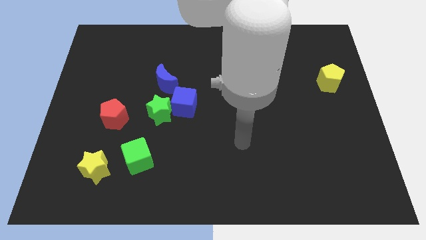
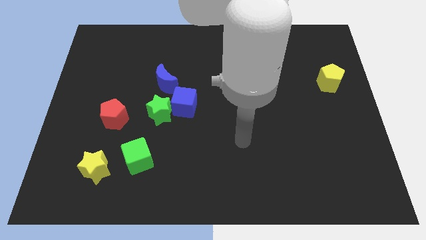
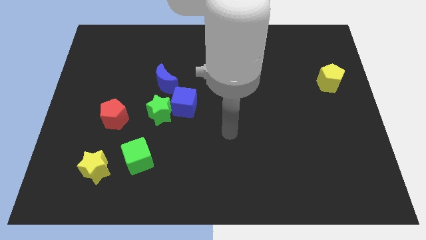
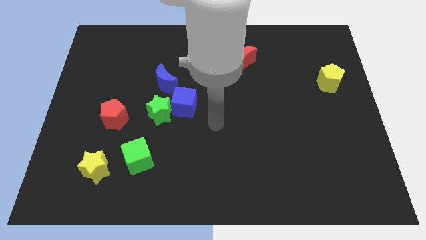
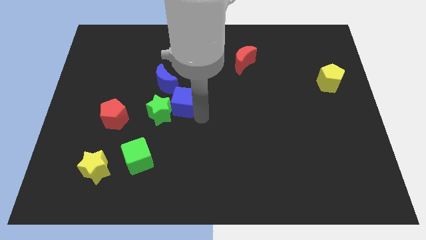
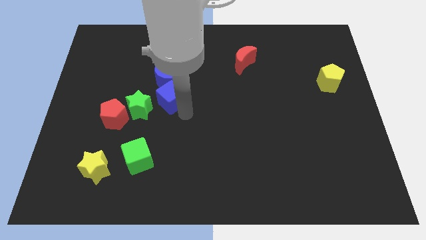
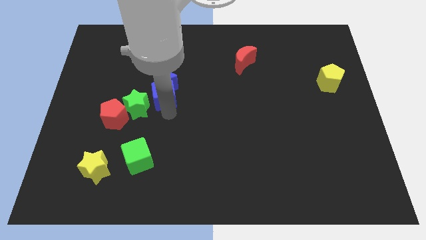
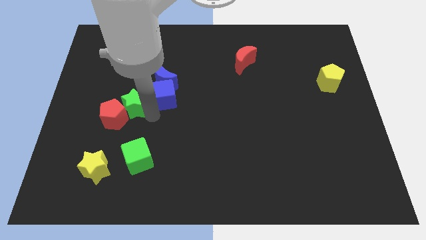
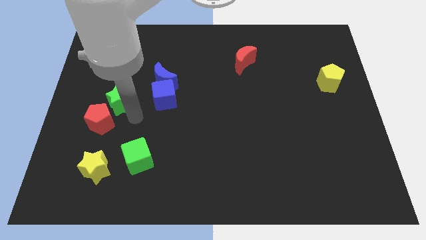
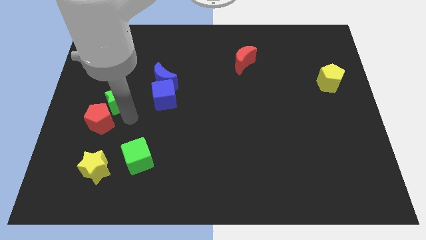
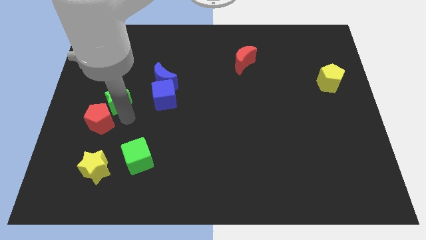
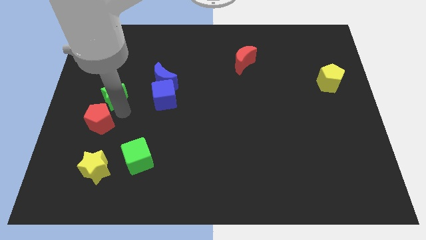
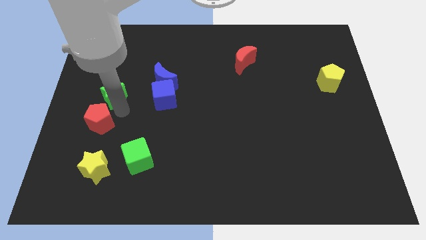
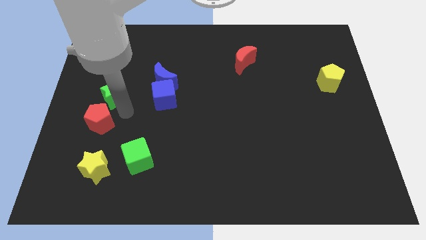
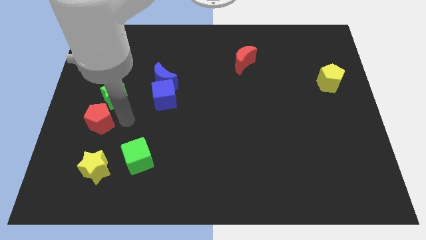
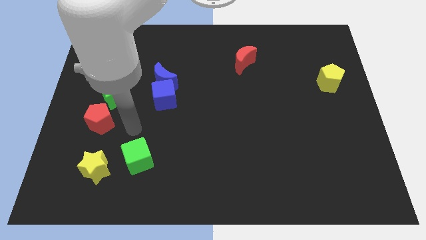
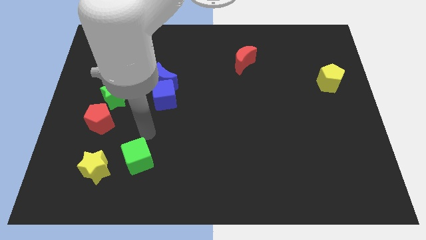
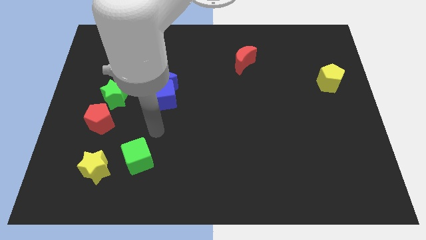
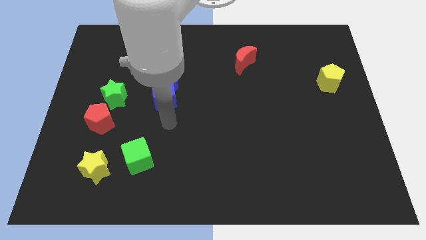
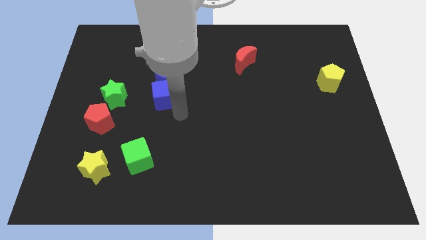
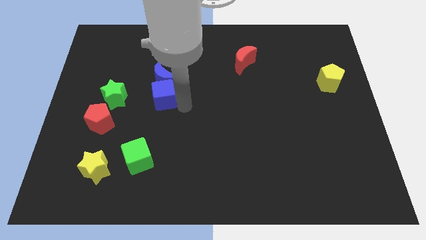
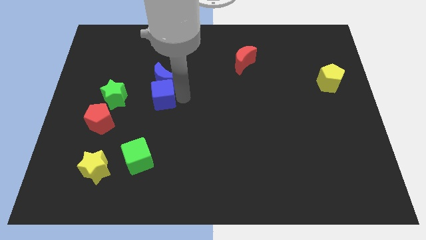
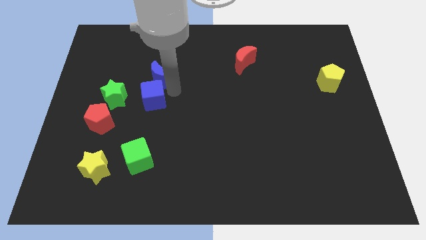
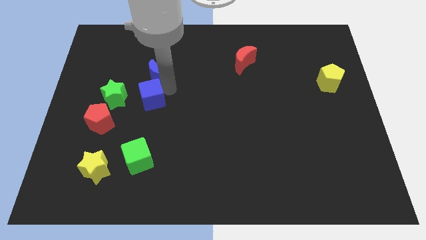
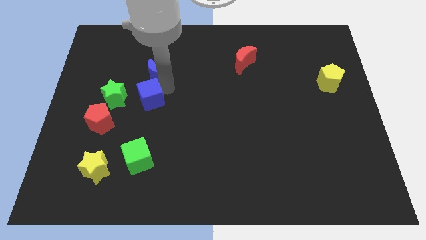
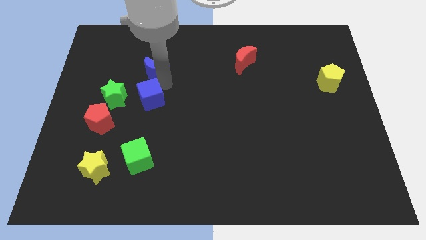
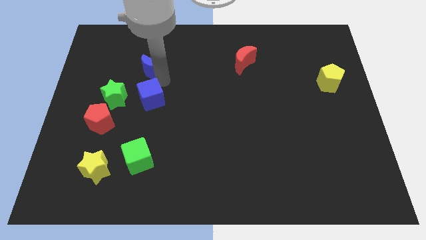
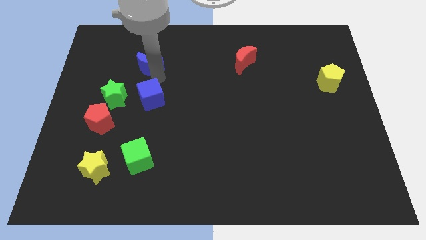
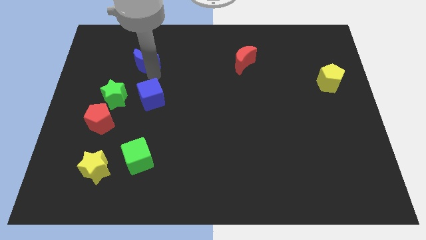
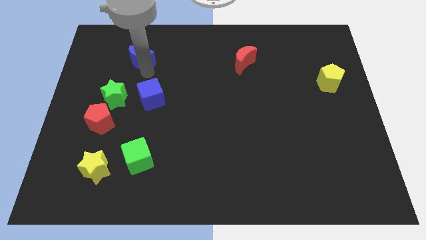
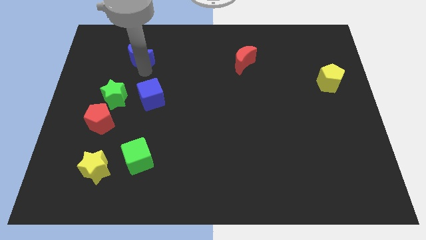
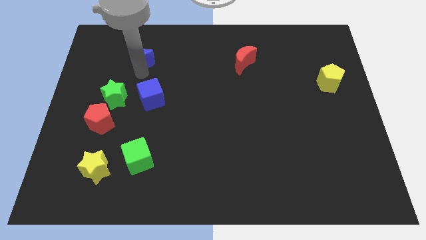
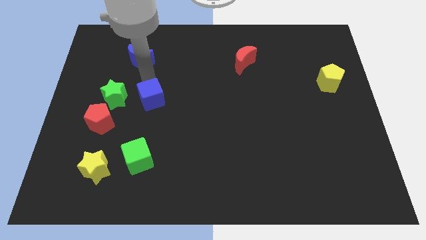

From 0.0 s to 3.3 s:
move the blue crescent towards the top left of the board

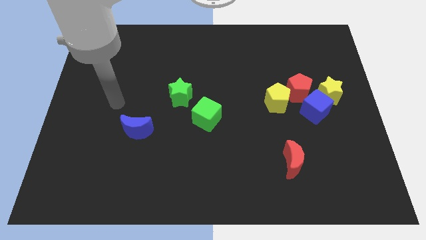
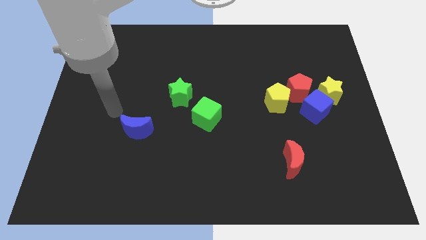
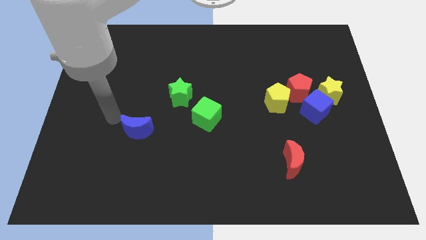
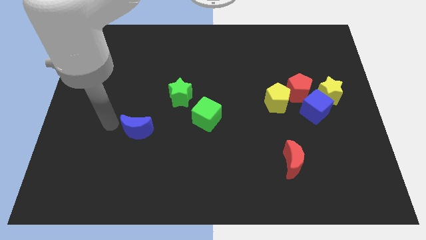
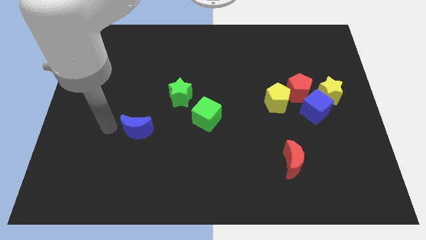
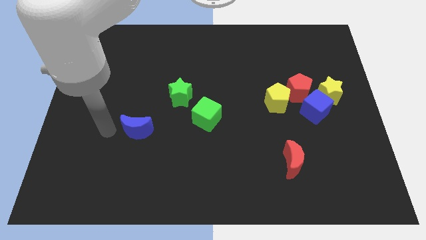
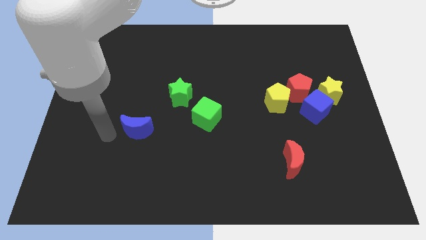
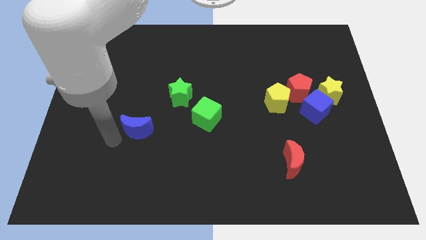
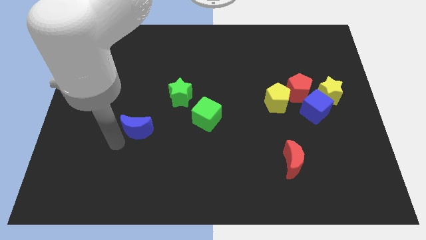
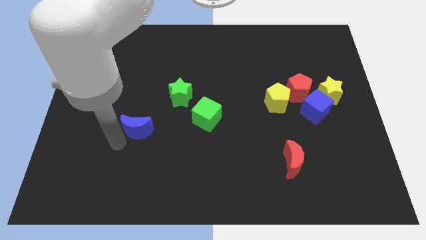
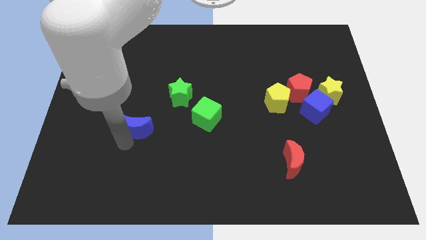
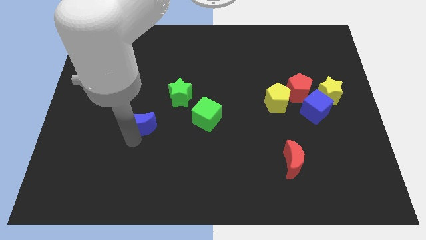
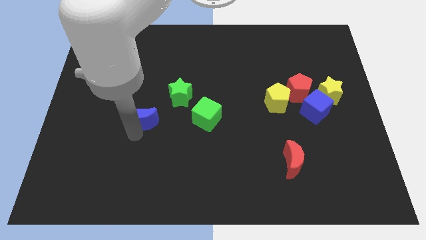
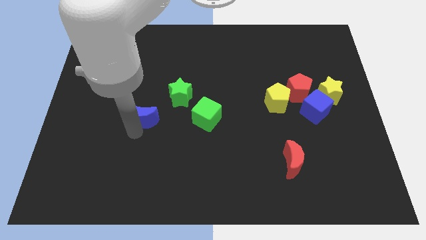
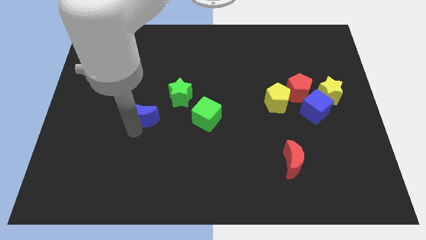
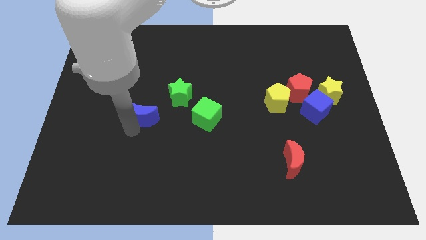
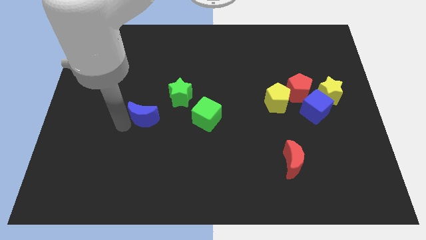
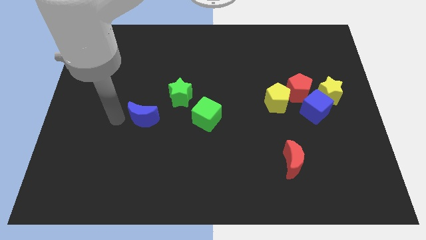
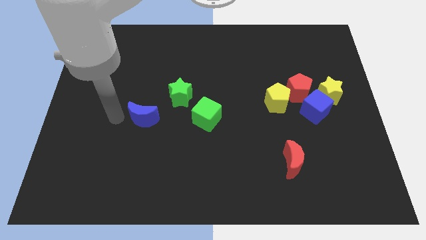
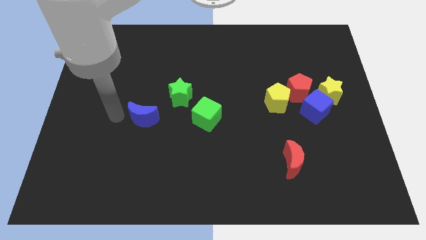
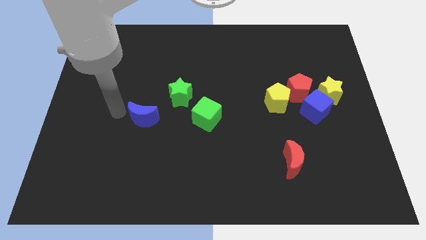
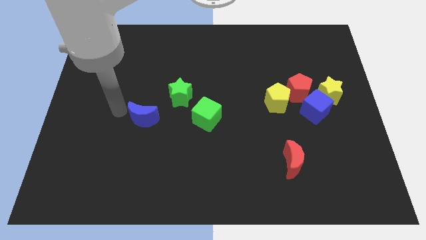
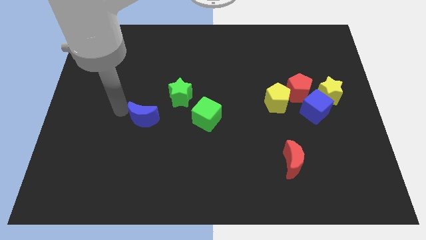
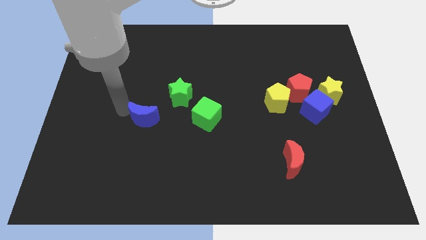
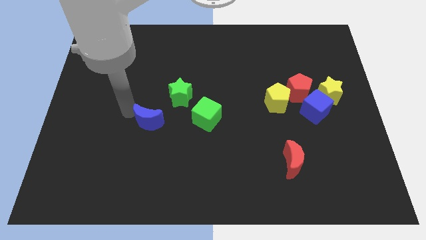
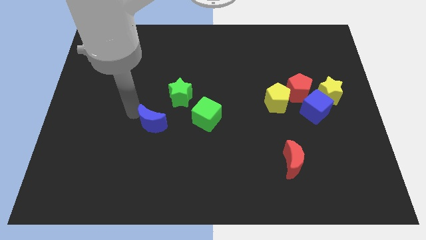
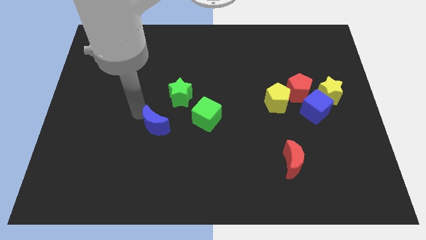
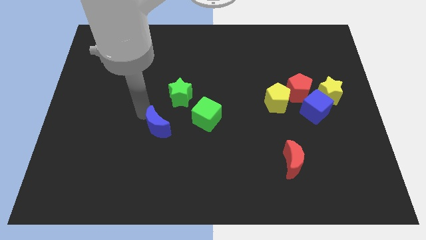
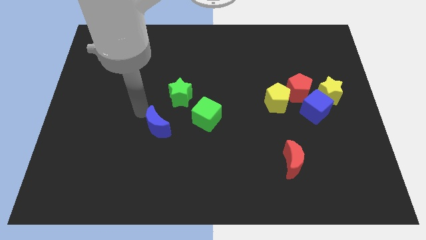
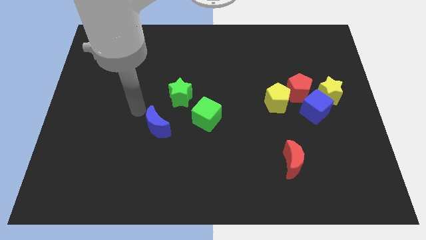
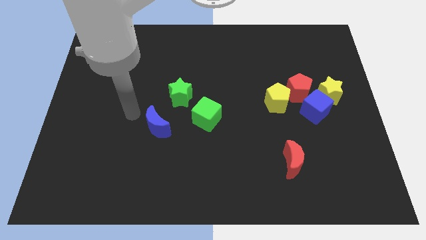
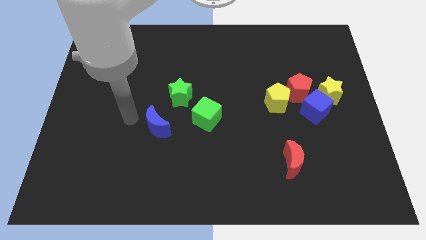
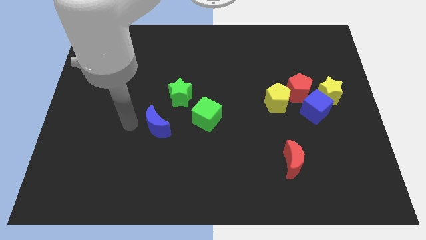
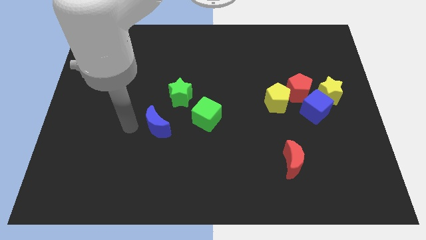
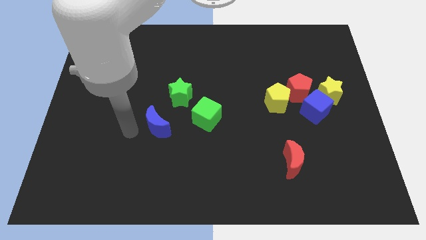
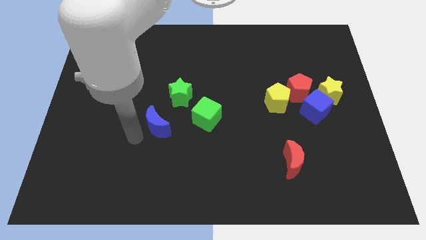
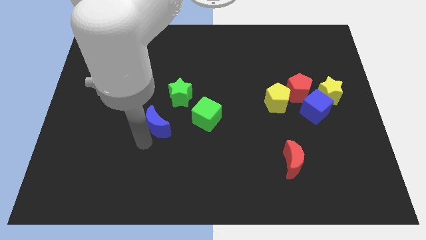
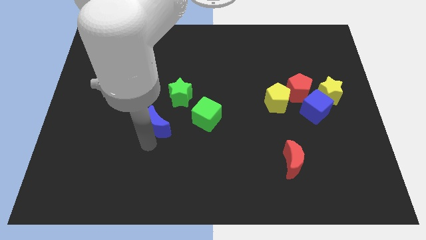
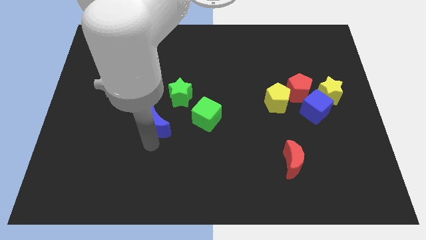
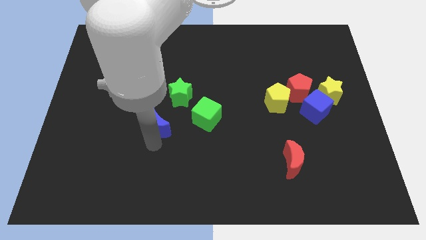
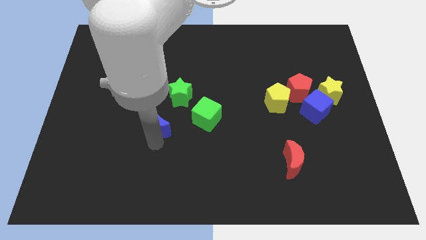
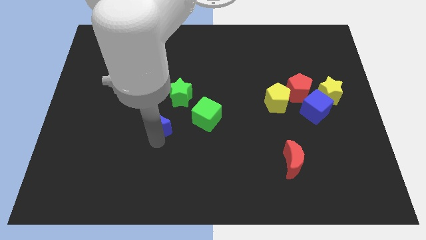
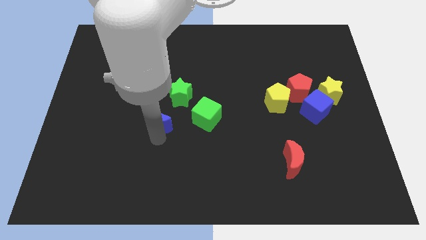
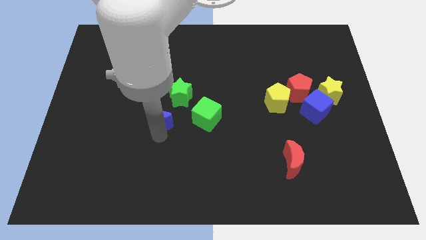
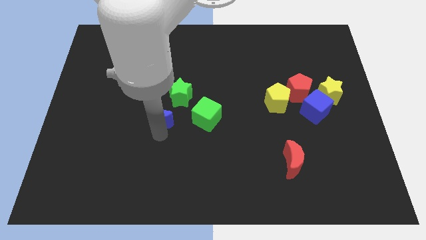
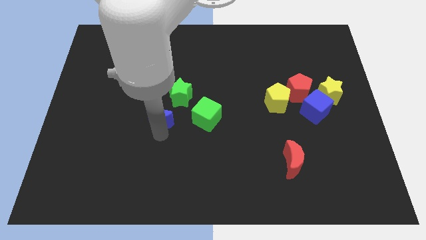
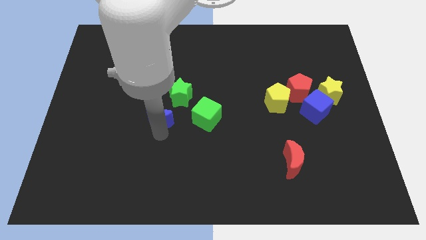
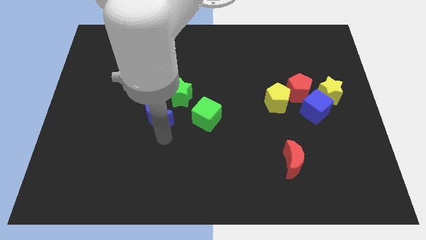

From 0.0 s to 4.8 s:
move the blue crescent to the left of the green cube

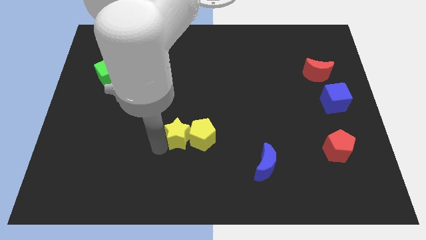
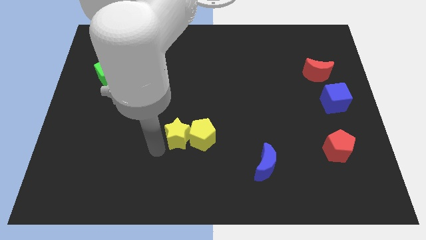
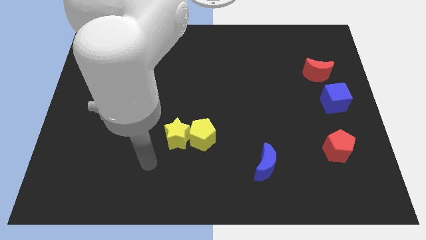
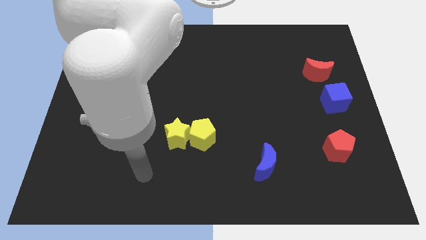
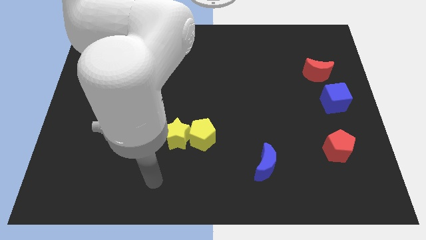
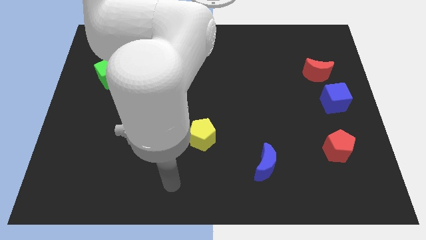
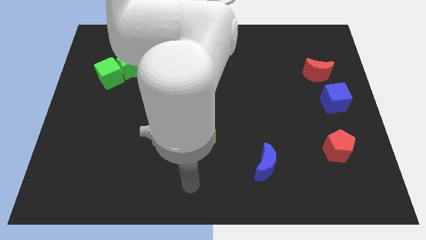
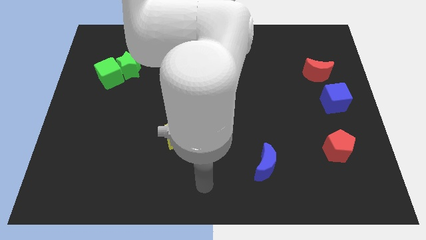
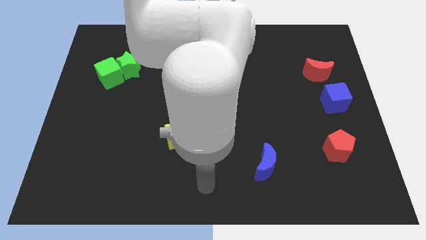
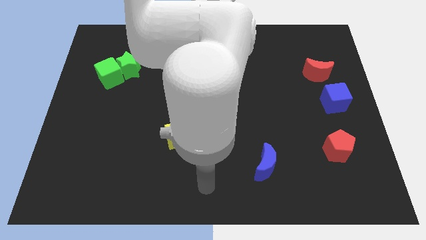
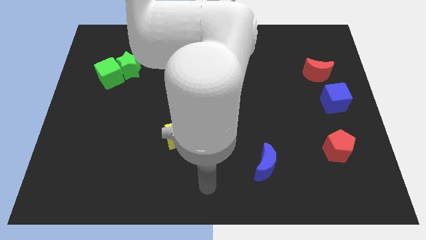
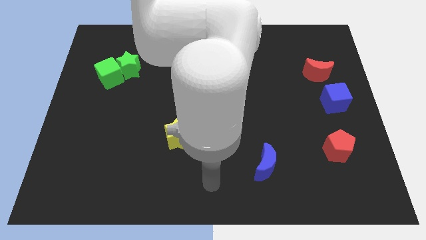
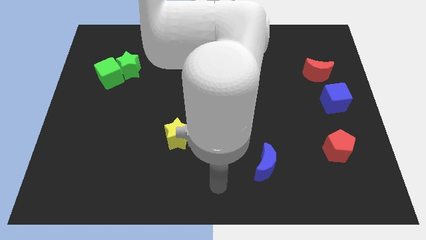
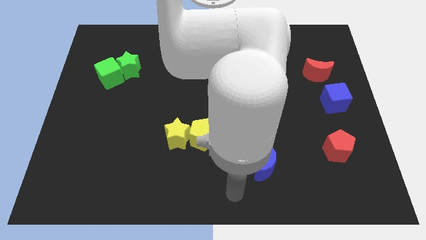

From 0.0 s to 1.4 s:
move your arm away from the yellow star
